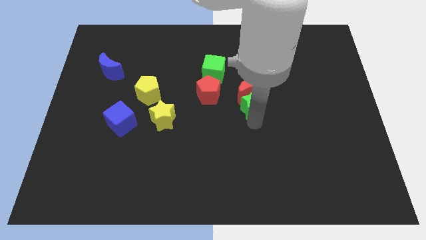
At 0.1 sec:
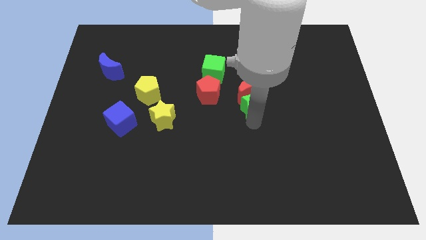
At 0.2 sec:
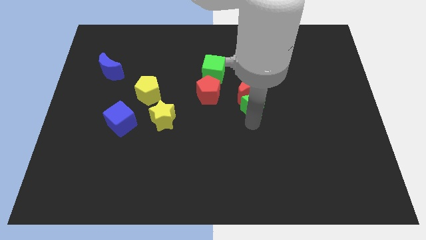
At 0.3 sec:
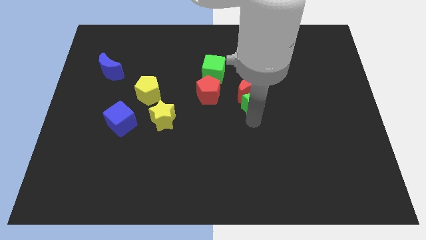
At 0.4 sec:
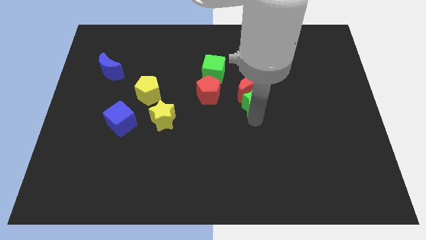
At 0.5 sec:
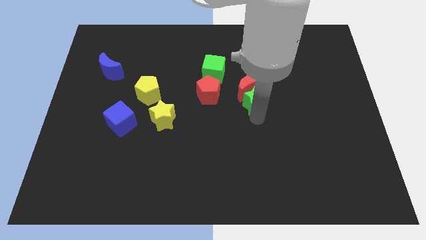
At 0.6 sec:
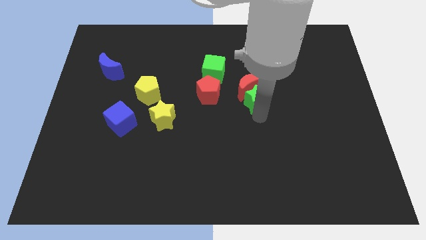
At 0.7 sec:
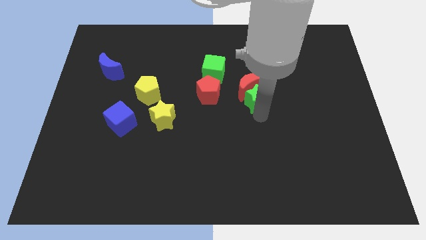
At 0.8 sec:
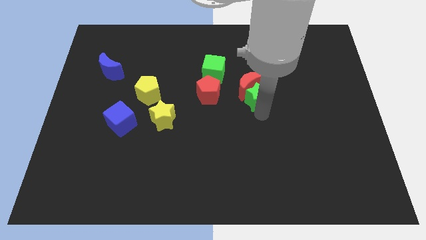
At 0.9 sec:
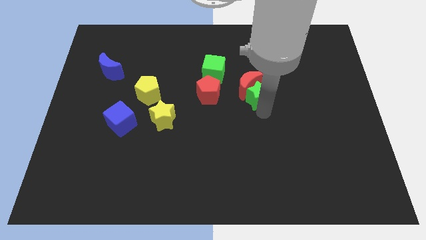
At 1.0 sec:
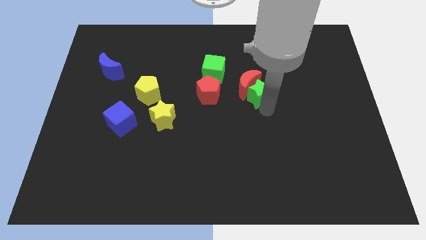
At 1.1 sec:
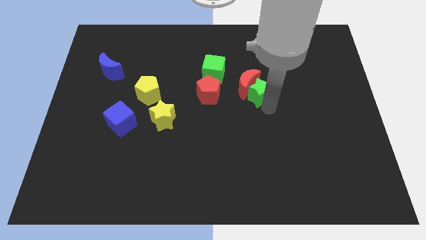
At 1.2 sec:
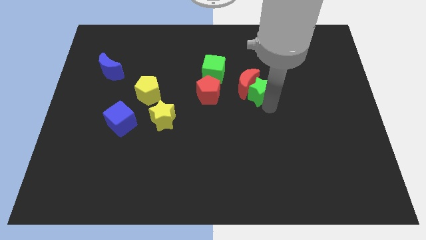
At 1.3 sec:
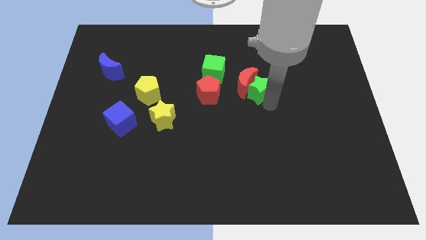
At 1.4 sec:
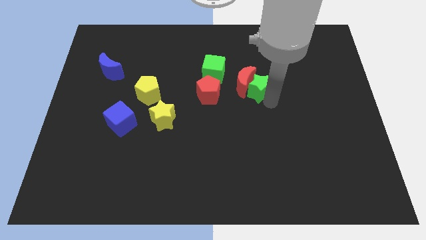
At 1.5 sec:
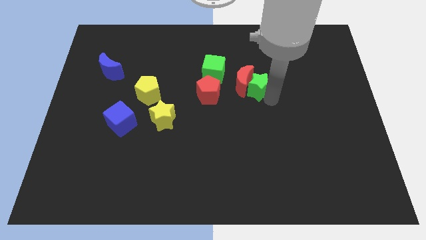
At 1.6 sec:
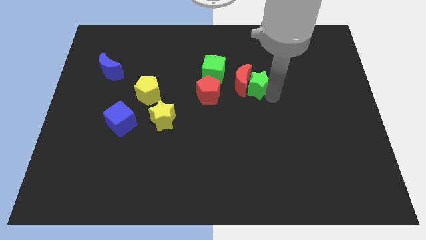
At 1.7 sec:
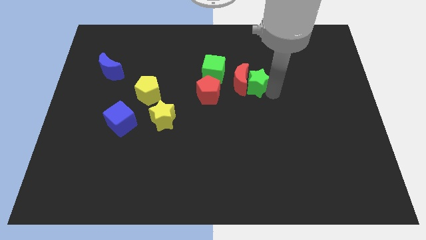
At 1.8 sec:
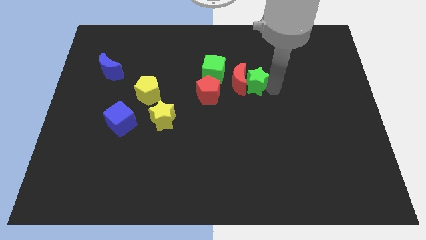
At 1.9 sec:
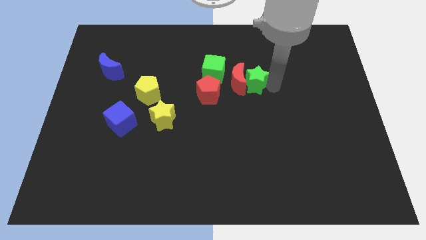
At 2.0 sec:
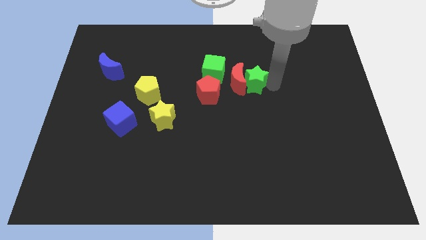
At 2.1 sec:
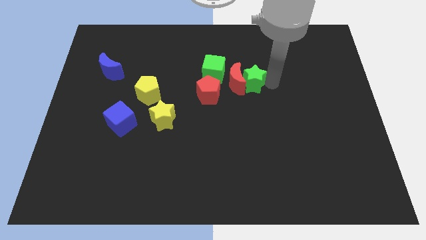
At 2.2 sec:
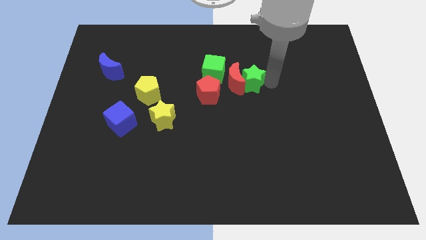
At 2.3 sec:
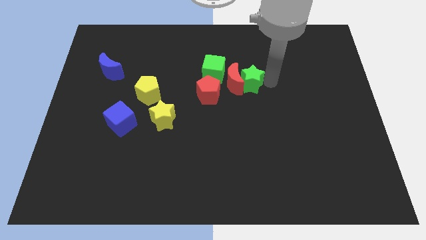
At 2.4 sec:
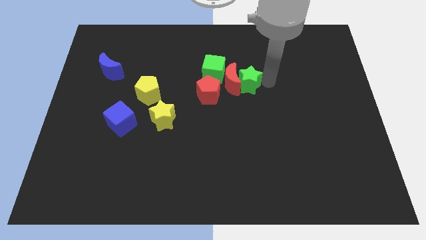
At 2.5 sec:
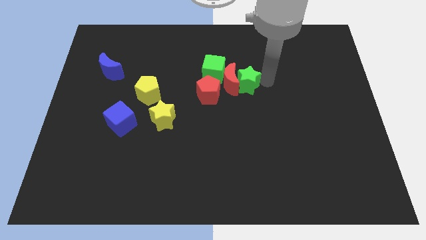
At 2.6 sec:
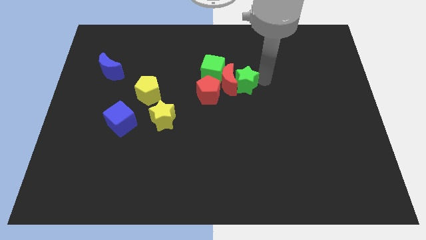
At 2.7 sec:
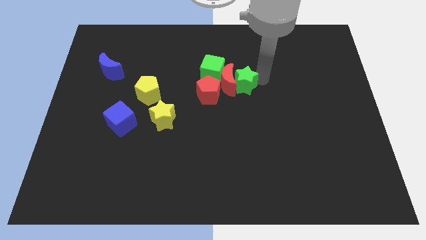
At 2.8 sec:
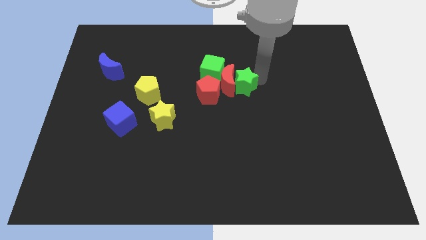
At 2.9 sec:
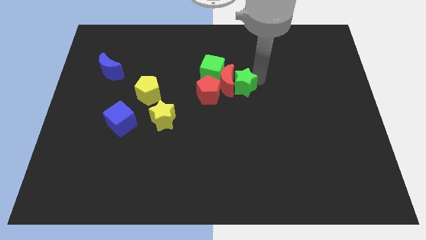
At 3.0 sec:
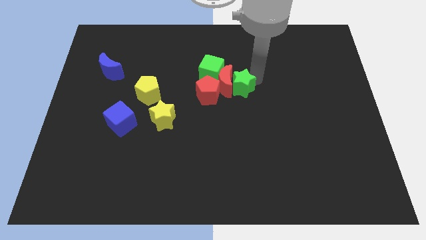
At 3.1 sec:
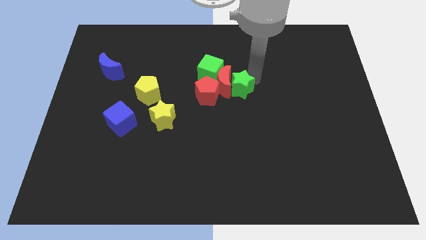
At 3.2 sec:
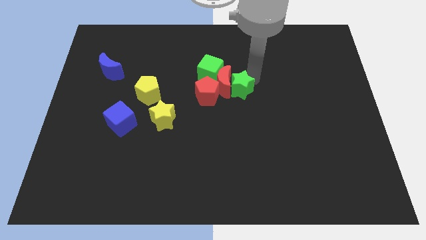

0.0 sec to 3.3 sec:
push the red moon and the green star to the bottom right side of the green cube

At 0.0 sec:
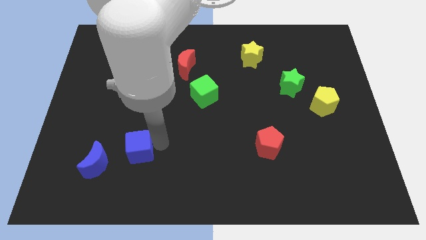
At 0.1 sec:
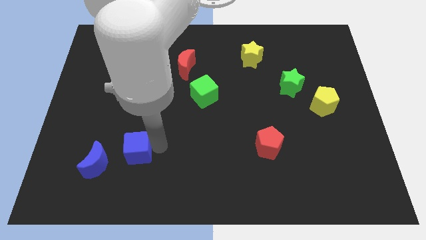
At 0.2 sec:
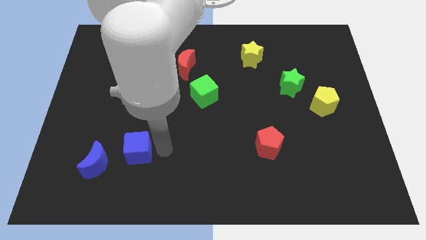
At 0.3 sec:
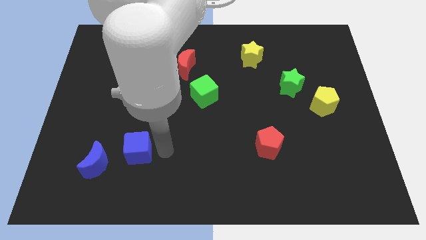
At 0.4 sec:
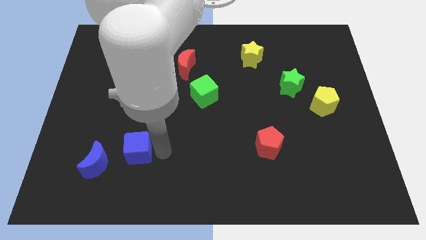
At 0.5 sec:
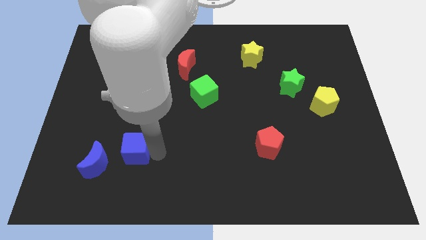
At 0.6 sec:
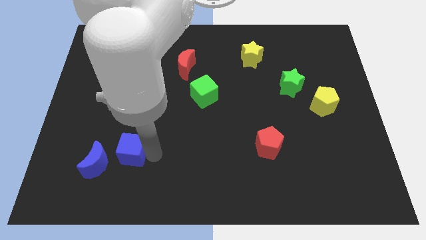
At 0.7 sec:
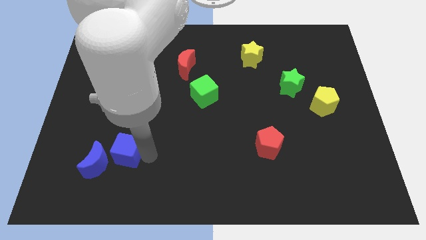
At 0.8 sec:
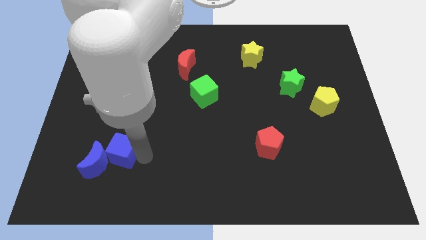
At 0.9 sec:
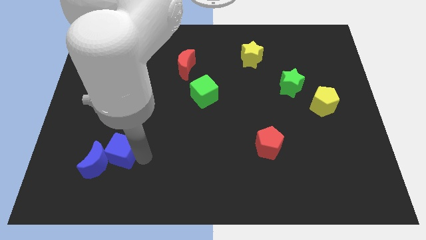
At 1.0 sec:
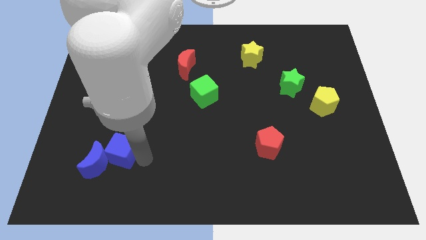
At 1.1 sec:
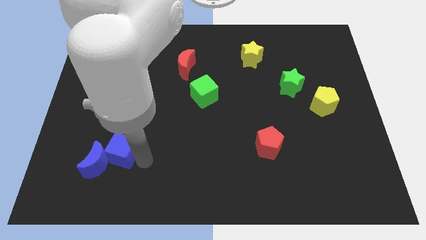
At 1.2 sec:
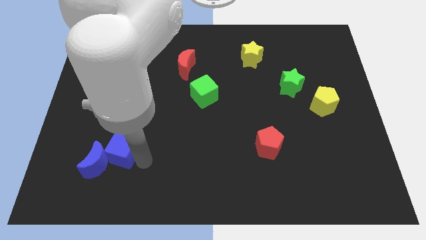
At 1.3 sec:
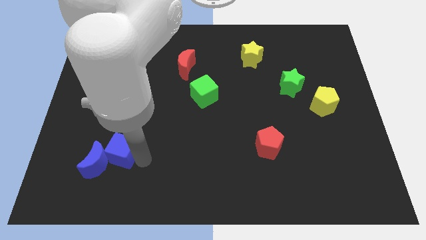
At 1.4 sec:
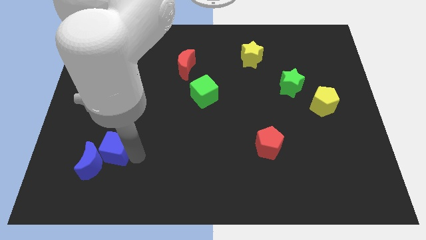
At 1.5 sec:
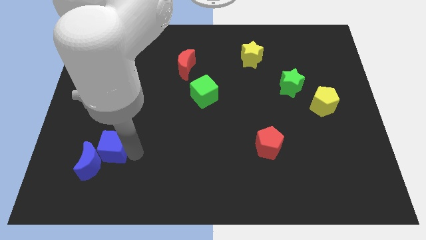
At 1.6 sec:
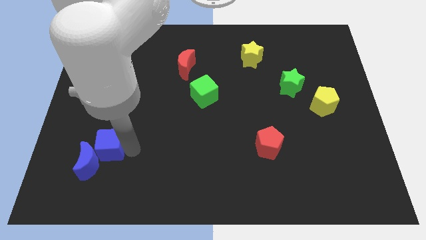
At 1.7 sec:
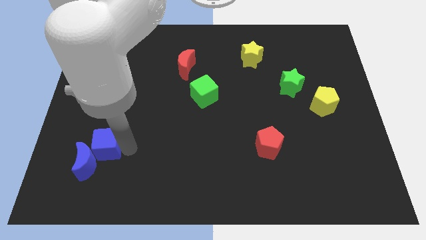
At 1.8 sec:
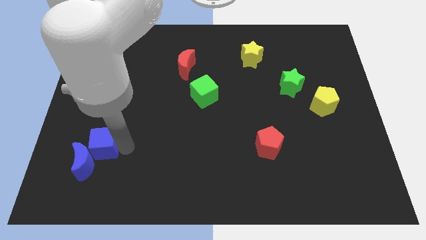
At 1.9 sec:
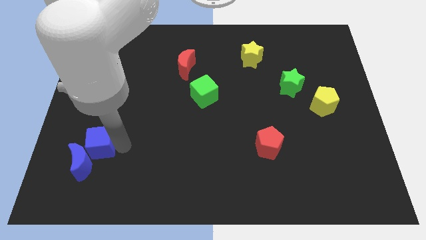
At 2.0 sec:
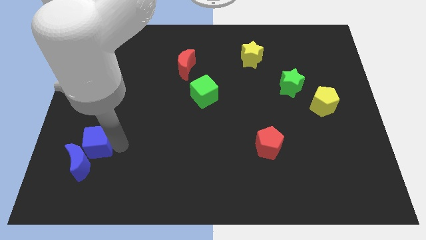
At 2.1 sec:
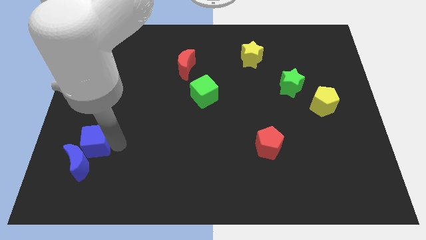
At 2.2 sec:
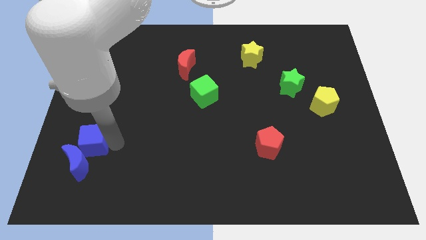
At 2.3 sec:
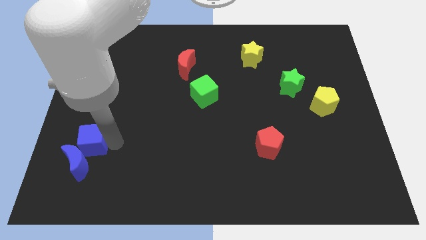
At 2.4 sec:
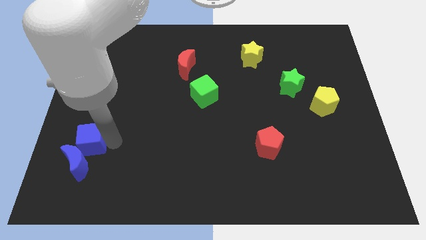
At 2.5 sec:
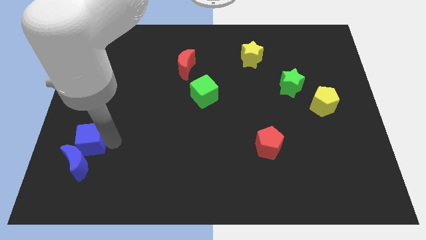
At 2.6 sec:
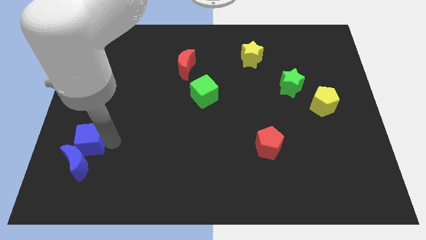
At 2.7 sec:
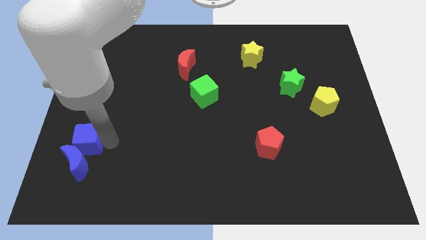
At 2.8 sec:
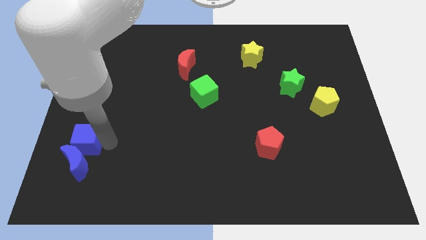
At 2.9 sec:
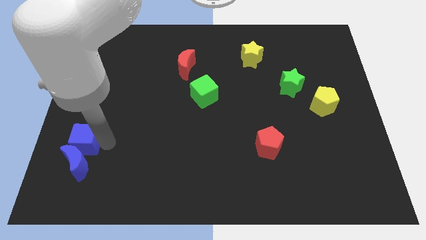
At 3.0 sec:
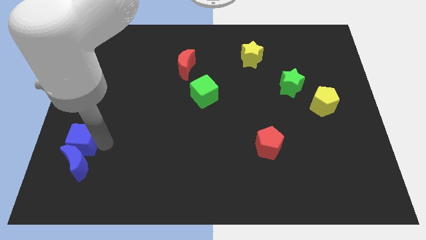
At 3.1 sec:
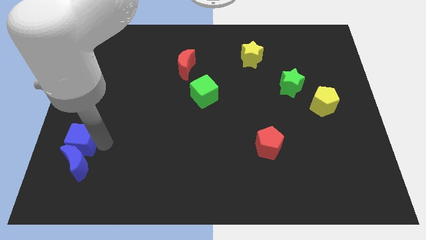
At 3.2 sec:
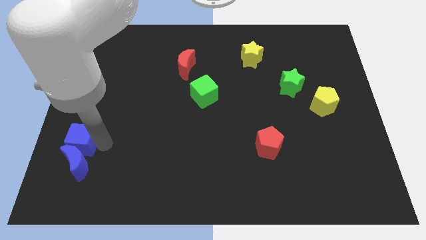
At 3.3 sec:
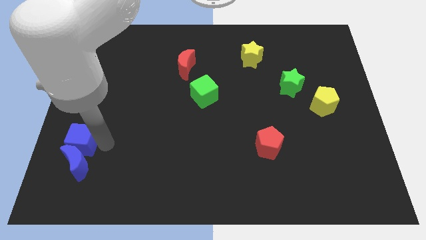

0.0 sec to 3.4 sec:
place the blue cube at the top side of the blue crescent

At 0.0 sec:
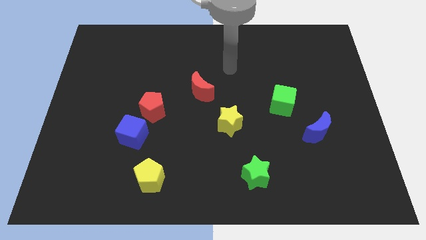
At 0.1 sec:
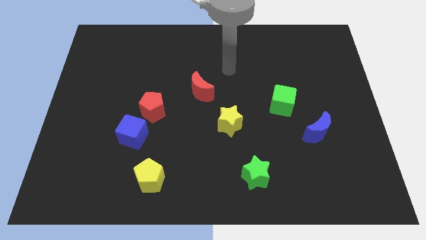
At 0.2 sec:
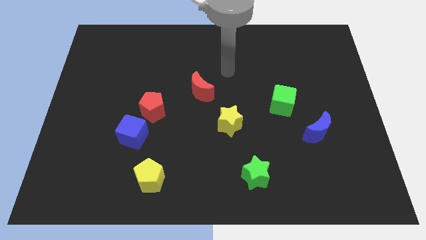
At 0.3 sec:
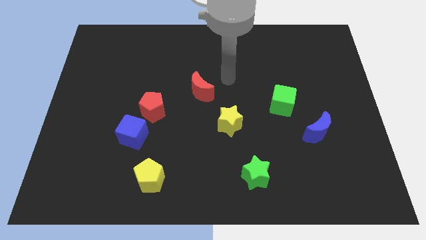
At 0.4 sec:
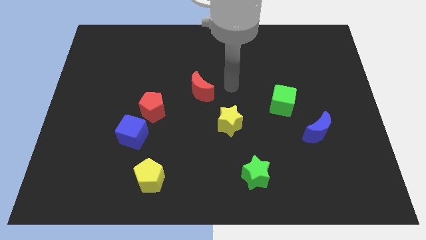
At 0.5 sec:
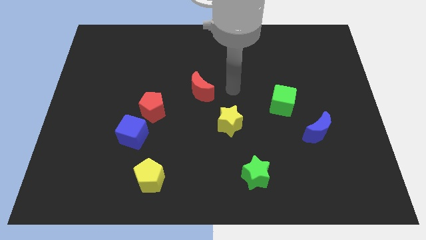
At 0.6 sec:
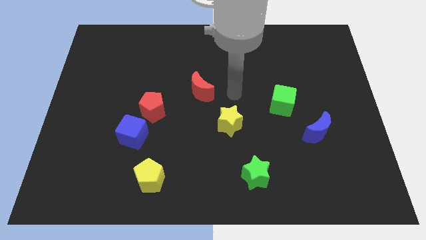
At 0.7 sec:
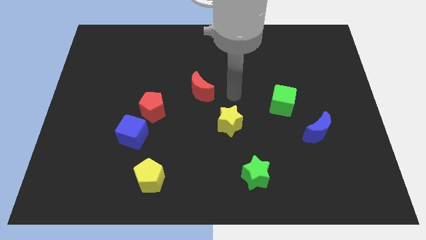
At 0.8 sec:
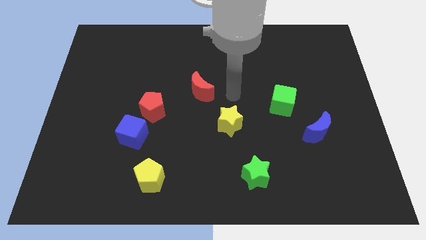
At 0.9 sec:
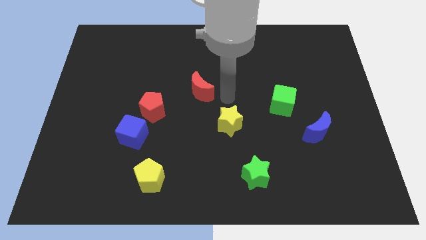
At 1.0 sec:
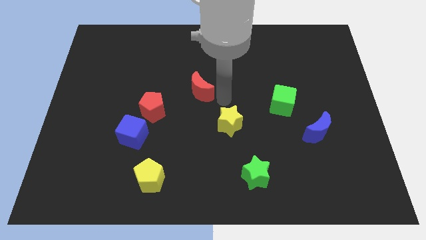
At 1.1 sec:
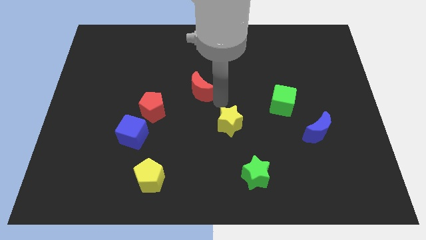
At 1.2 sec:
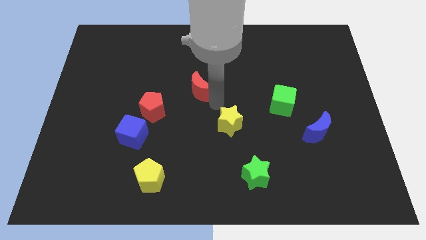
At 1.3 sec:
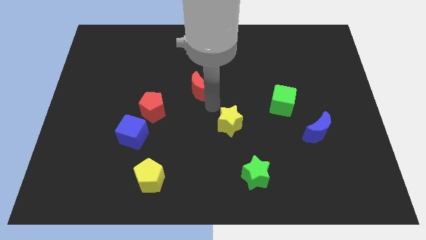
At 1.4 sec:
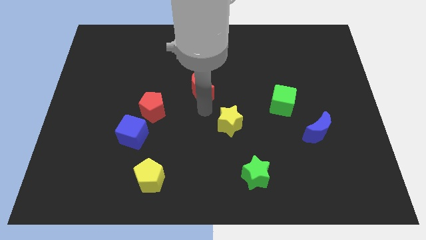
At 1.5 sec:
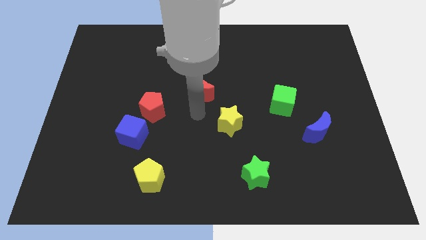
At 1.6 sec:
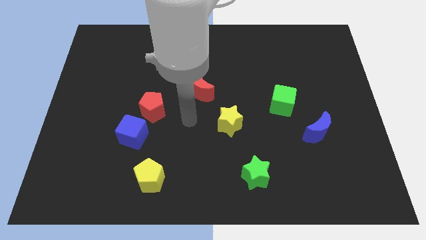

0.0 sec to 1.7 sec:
move the arm to the bottom of the red crescent

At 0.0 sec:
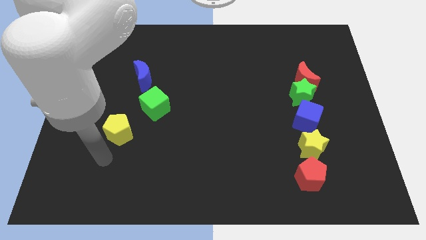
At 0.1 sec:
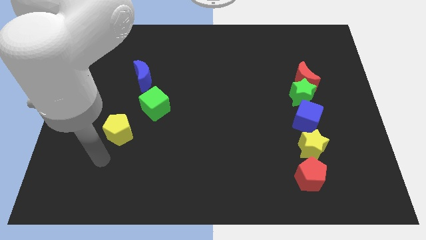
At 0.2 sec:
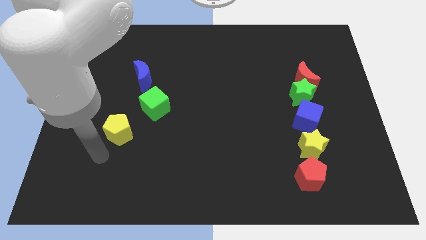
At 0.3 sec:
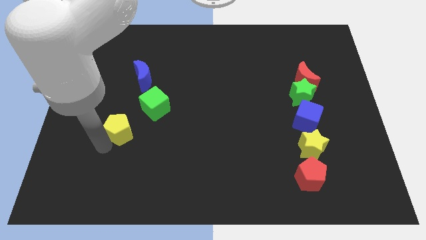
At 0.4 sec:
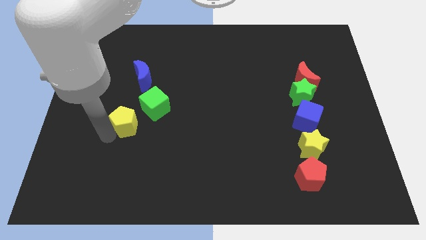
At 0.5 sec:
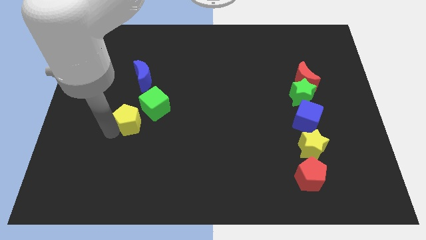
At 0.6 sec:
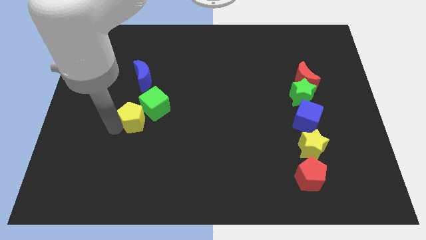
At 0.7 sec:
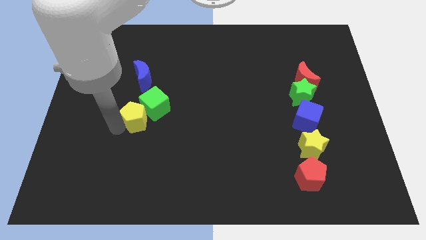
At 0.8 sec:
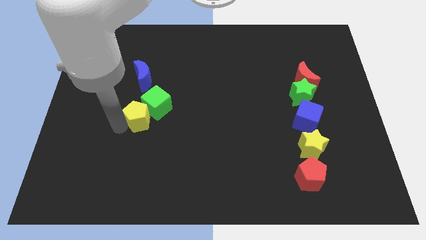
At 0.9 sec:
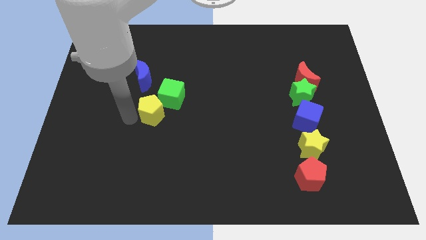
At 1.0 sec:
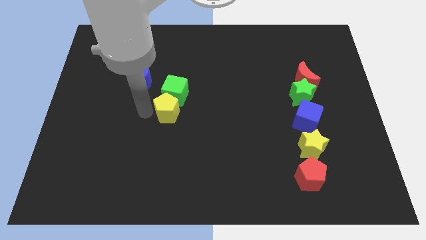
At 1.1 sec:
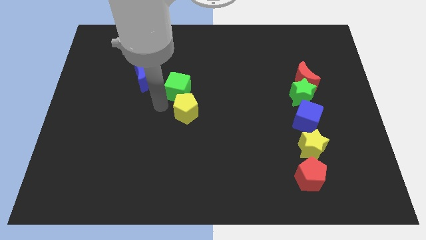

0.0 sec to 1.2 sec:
push the yellow pentagon into the green cube
